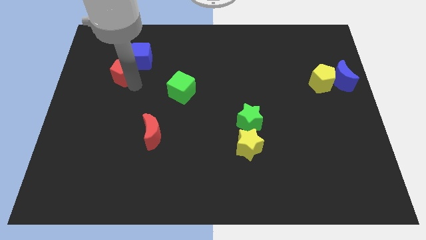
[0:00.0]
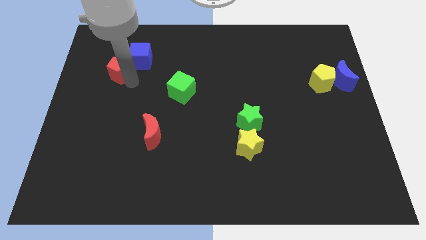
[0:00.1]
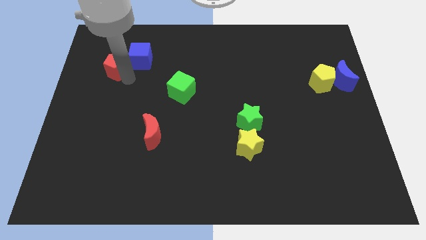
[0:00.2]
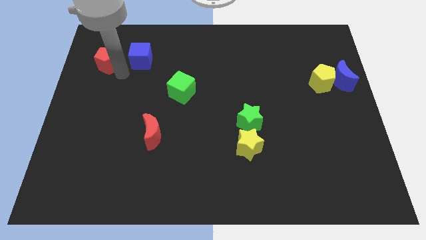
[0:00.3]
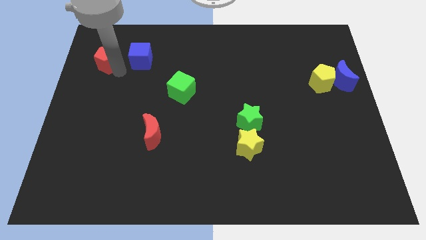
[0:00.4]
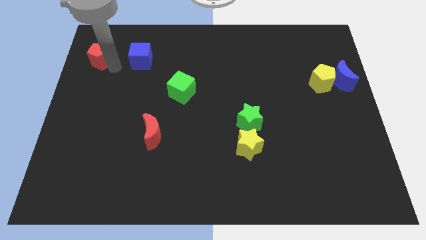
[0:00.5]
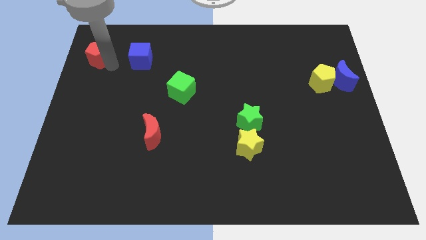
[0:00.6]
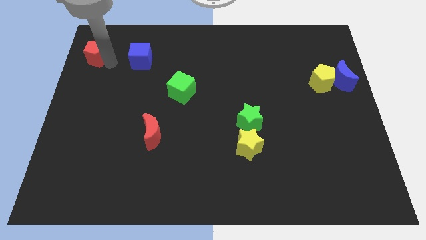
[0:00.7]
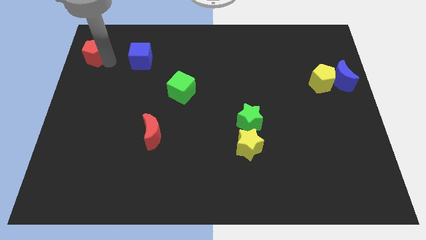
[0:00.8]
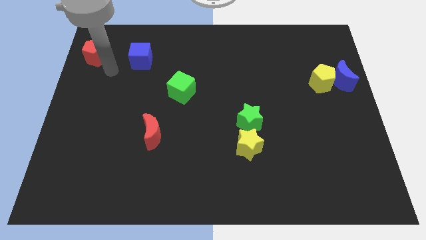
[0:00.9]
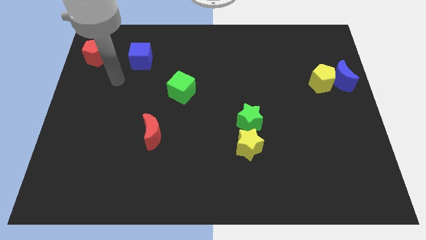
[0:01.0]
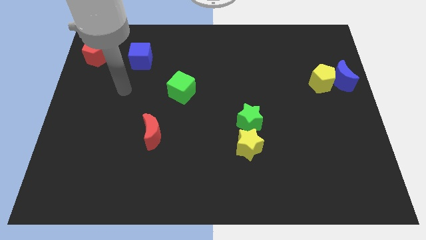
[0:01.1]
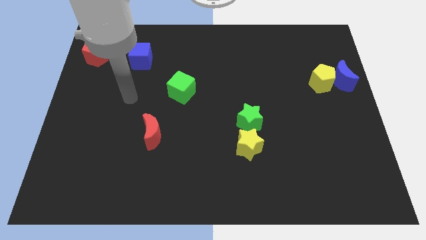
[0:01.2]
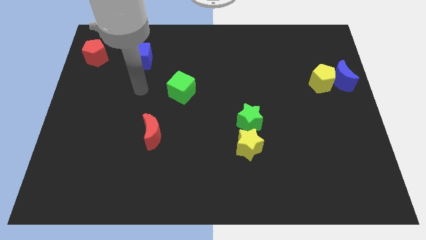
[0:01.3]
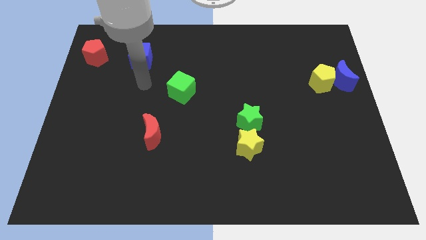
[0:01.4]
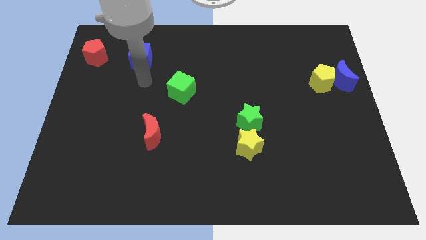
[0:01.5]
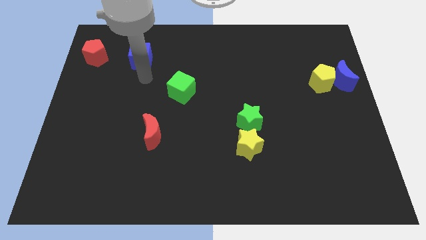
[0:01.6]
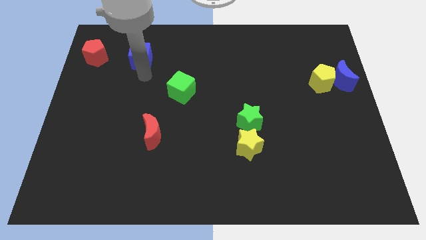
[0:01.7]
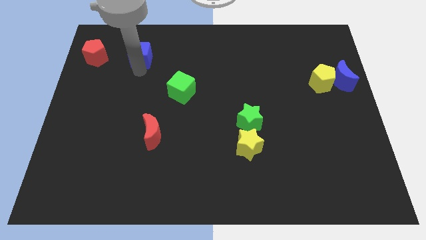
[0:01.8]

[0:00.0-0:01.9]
move the red pentagon to the left side of the blue cube

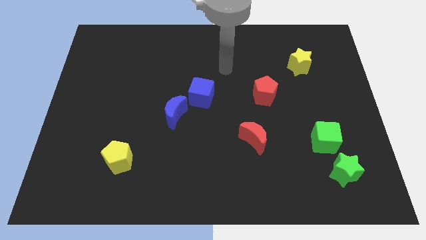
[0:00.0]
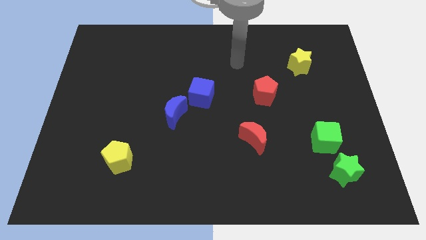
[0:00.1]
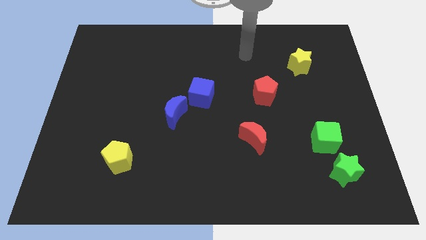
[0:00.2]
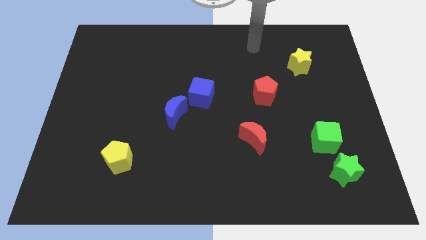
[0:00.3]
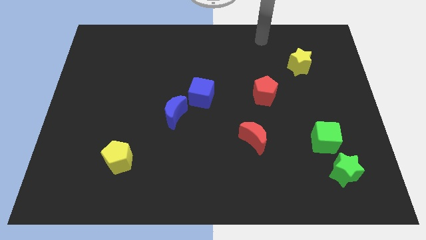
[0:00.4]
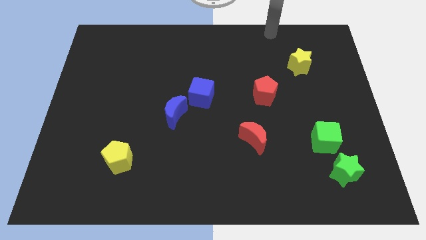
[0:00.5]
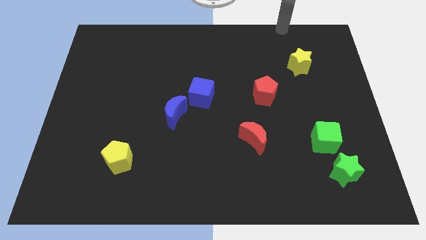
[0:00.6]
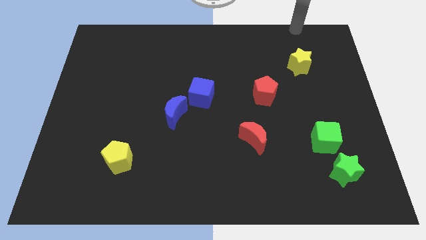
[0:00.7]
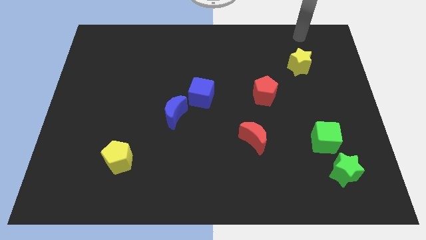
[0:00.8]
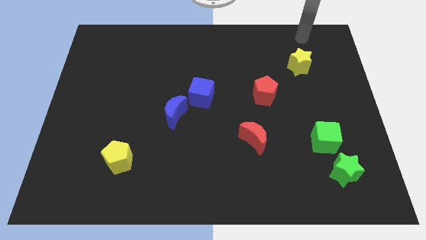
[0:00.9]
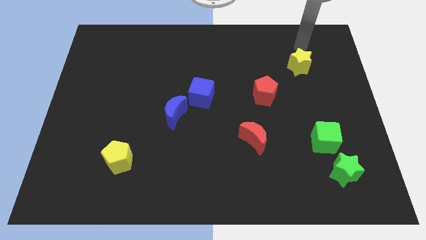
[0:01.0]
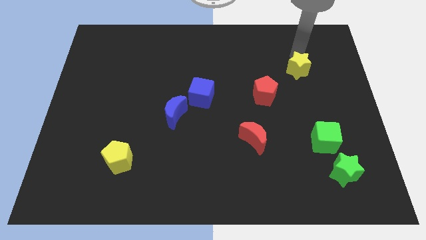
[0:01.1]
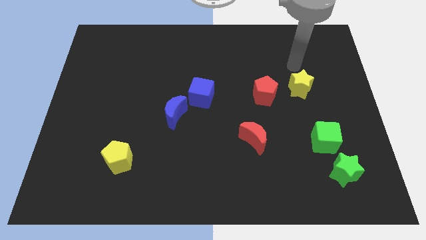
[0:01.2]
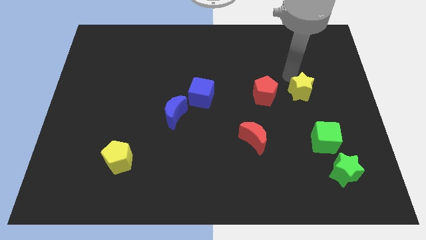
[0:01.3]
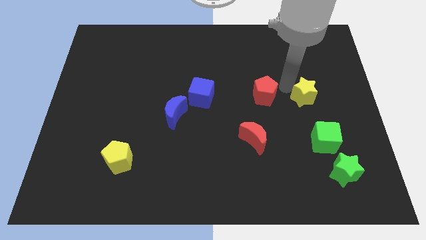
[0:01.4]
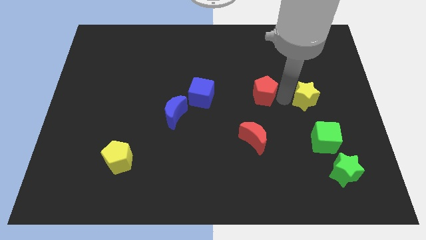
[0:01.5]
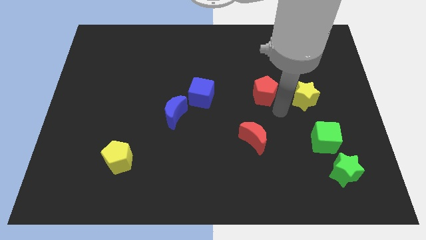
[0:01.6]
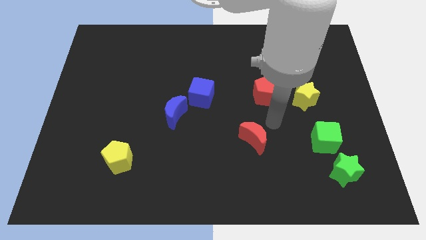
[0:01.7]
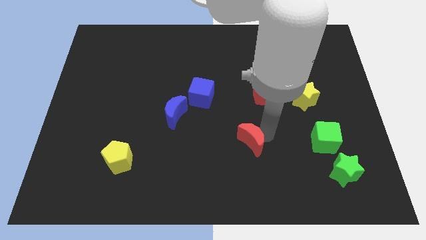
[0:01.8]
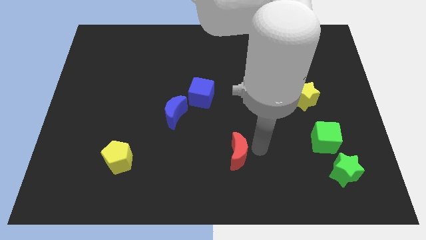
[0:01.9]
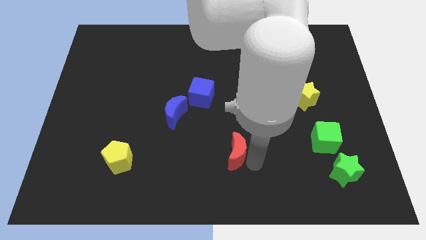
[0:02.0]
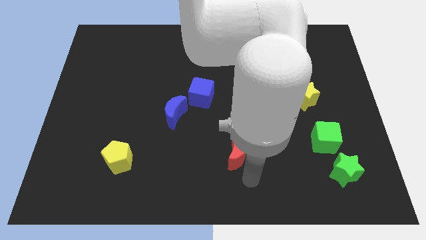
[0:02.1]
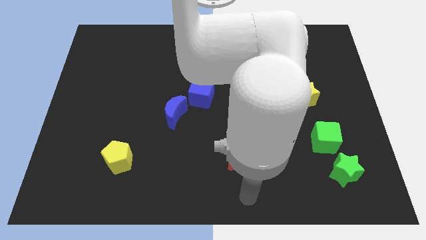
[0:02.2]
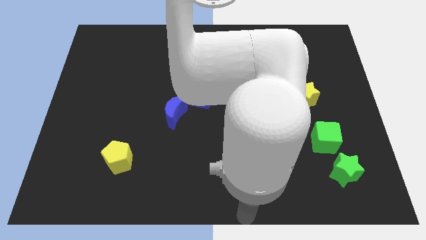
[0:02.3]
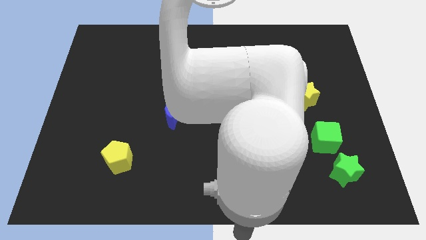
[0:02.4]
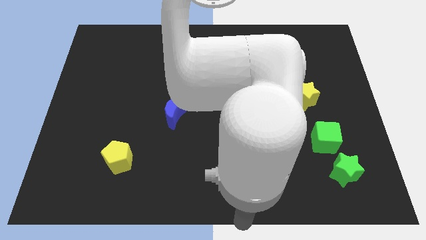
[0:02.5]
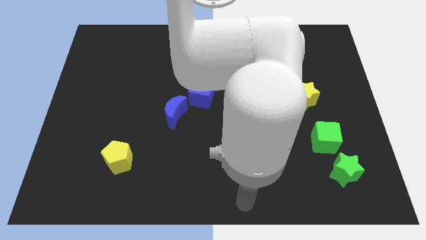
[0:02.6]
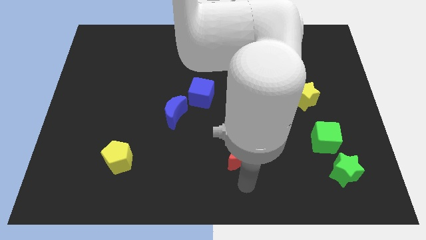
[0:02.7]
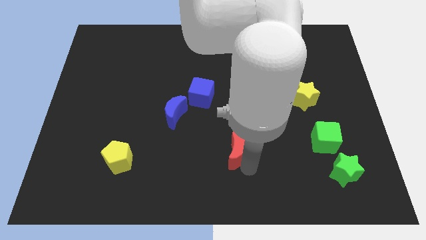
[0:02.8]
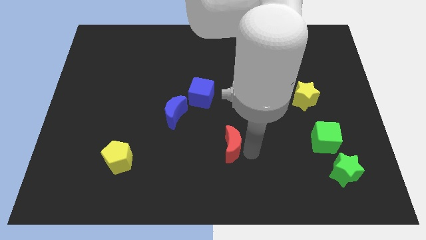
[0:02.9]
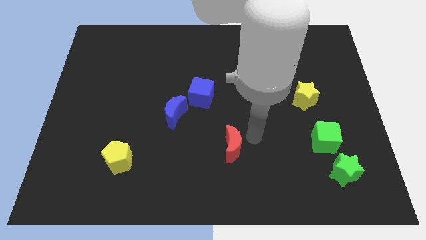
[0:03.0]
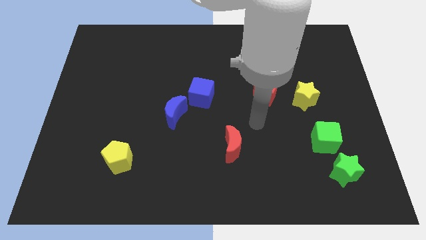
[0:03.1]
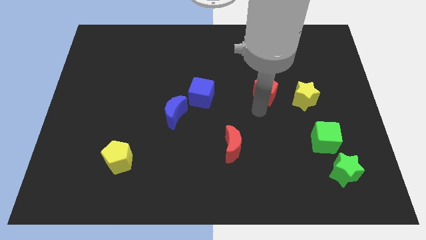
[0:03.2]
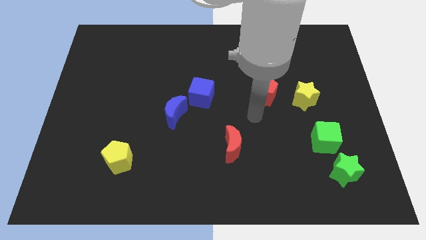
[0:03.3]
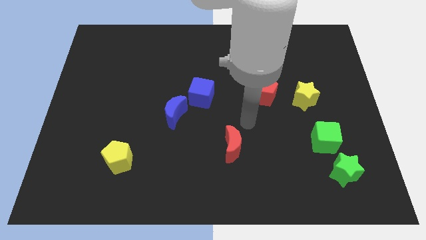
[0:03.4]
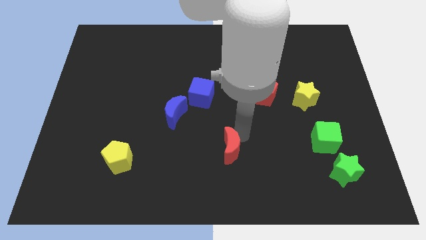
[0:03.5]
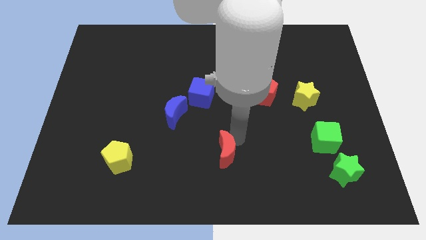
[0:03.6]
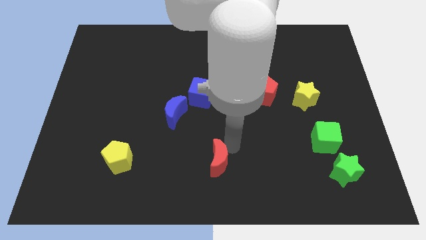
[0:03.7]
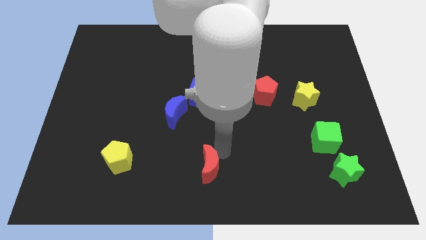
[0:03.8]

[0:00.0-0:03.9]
place the red moon at the bottom side of the board

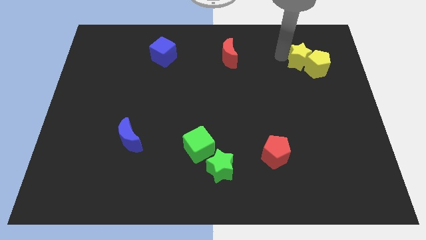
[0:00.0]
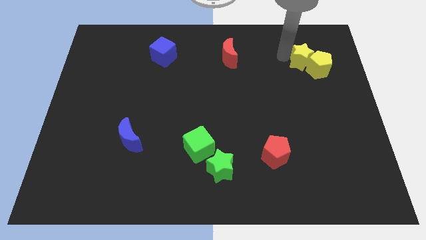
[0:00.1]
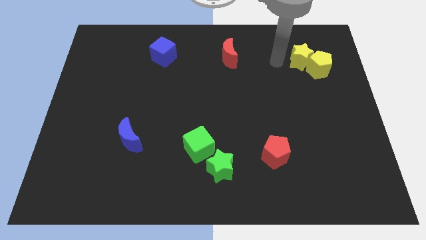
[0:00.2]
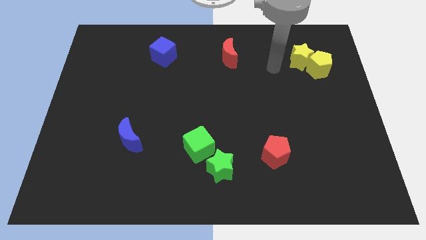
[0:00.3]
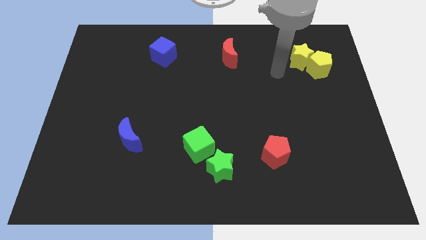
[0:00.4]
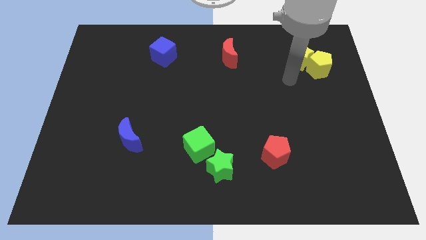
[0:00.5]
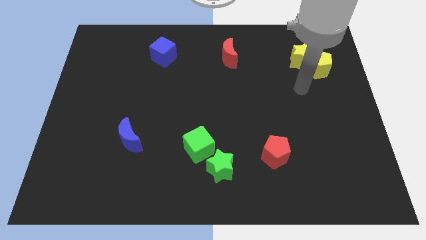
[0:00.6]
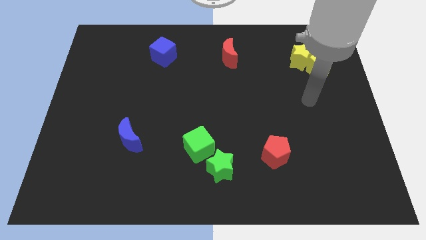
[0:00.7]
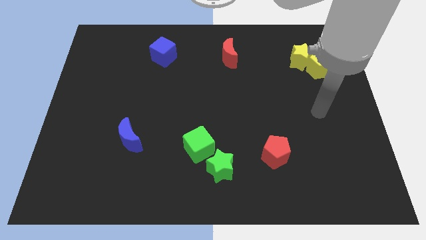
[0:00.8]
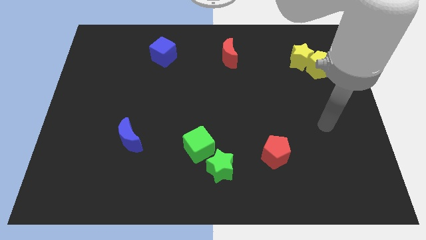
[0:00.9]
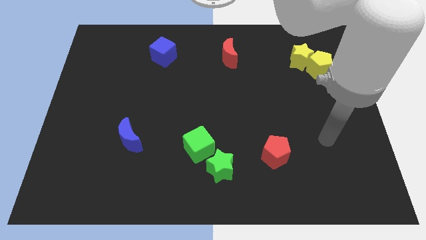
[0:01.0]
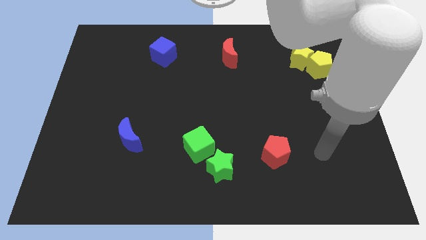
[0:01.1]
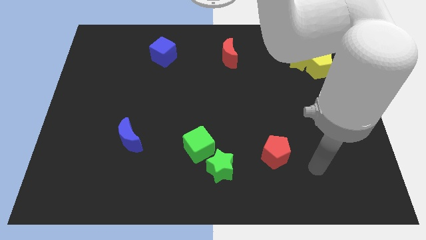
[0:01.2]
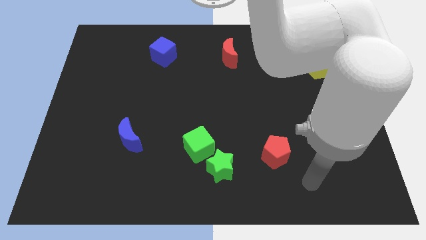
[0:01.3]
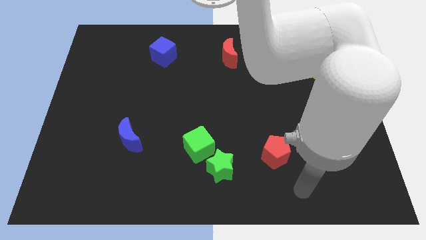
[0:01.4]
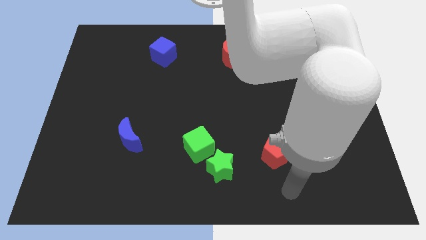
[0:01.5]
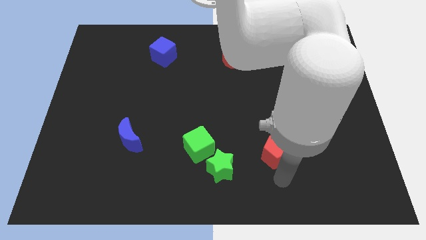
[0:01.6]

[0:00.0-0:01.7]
move your arm away from the yellow star

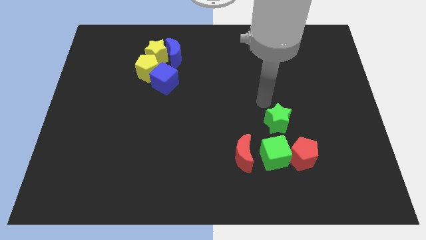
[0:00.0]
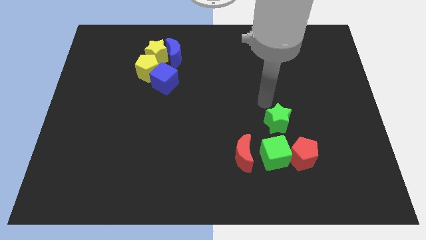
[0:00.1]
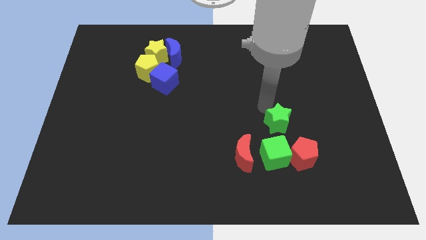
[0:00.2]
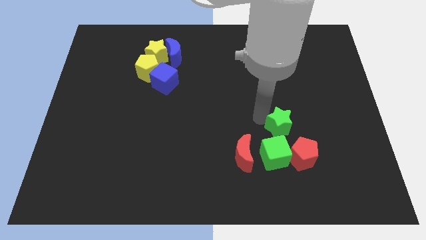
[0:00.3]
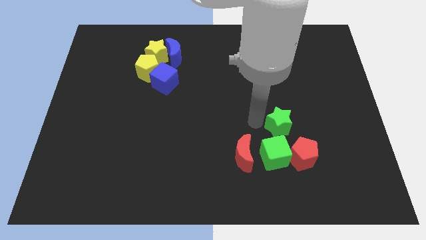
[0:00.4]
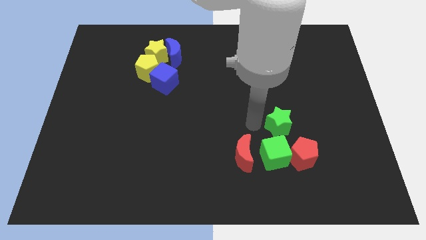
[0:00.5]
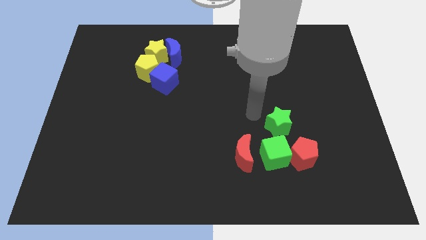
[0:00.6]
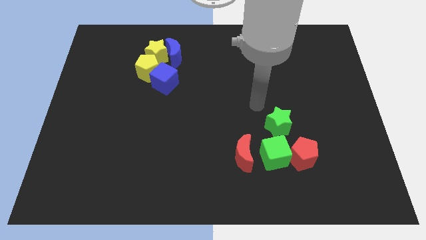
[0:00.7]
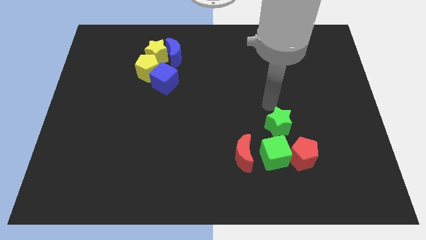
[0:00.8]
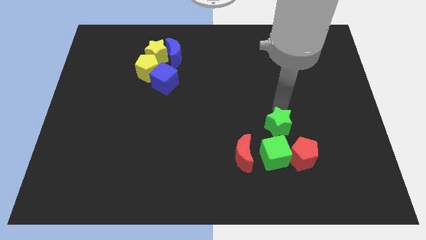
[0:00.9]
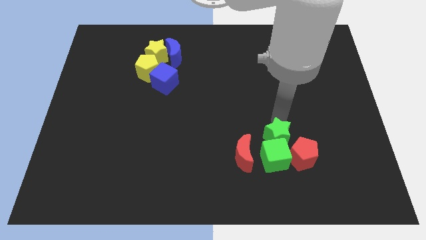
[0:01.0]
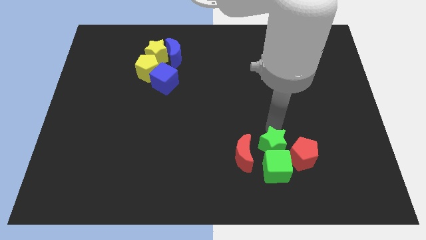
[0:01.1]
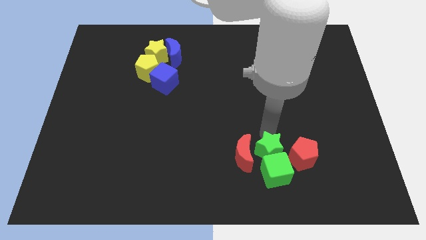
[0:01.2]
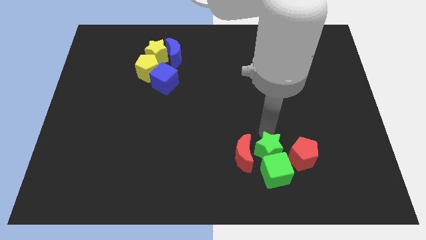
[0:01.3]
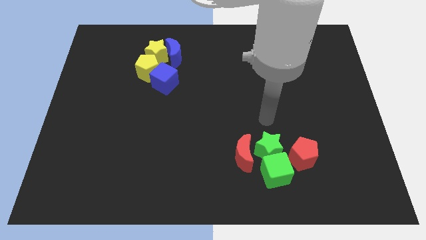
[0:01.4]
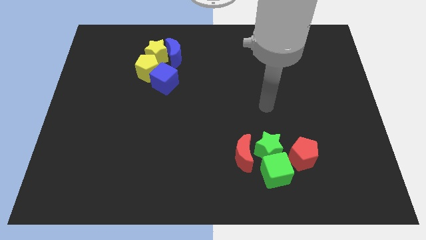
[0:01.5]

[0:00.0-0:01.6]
move the green star into the green cube
